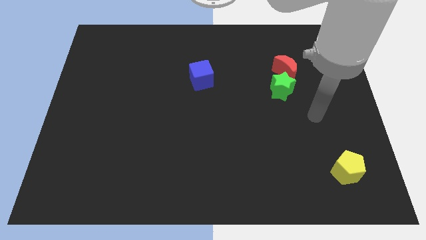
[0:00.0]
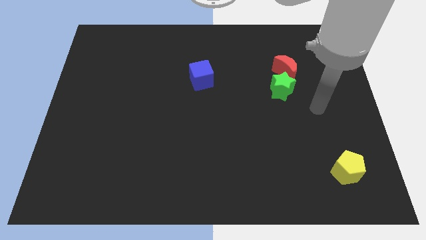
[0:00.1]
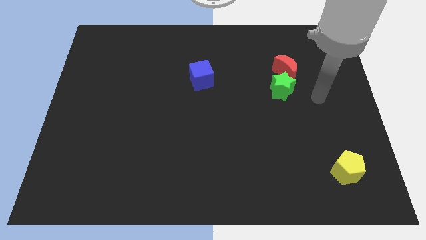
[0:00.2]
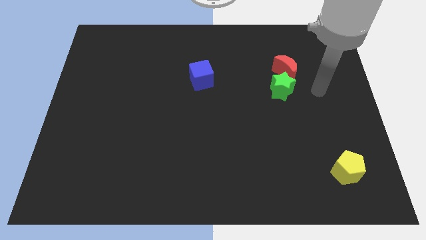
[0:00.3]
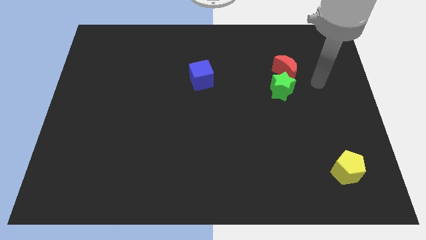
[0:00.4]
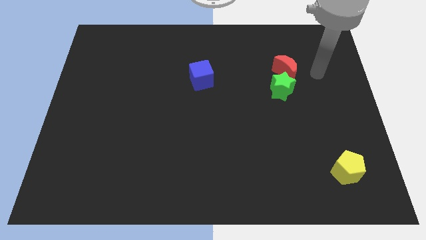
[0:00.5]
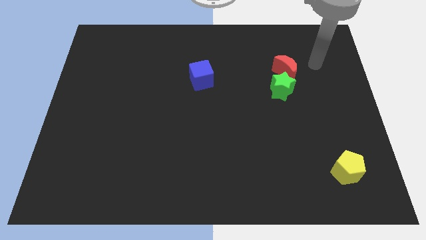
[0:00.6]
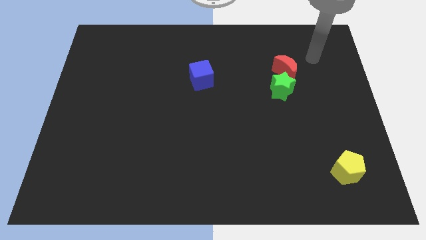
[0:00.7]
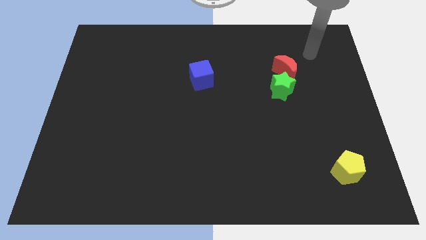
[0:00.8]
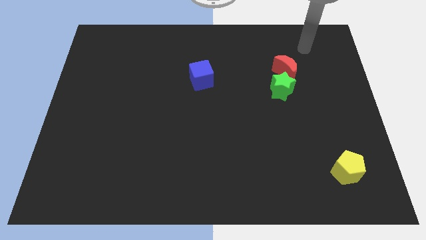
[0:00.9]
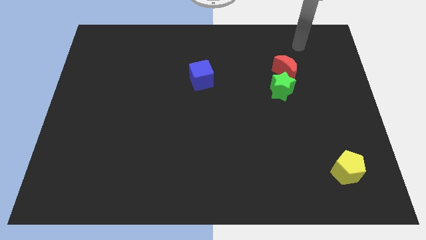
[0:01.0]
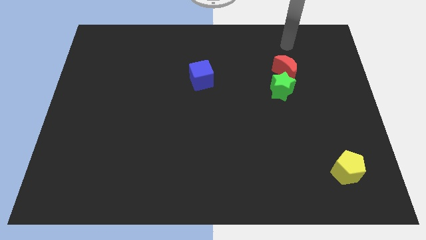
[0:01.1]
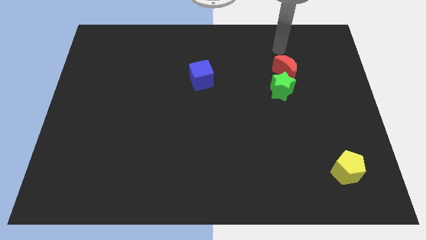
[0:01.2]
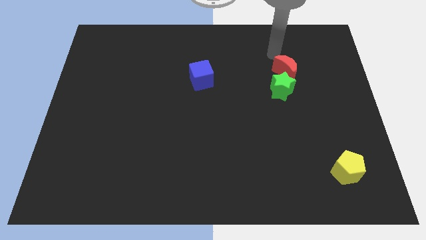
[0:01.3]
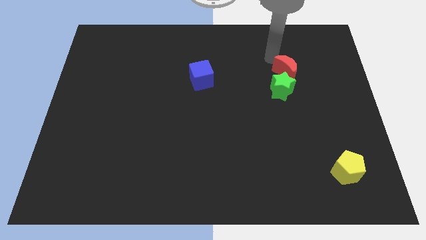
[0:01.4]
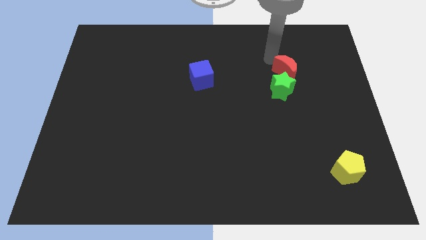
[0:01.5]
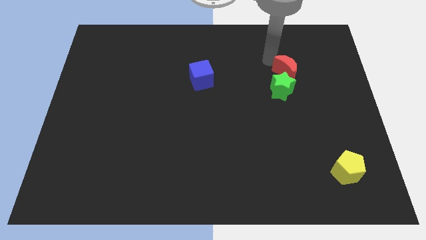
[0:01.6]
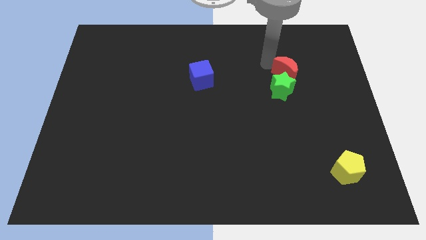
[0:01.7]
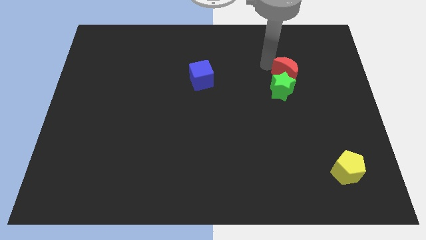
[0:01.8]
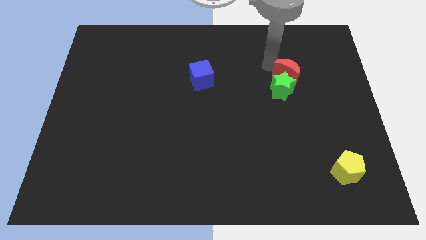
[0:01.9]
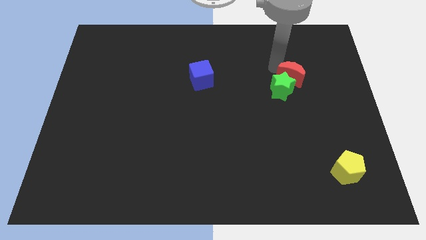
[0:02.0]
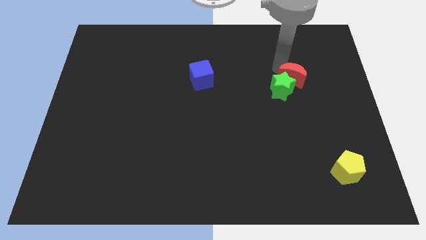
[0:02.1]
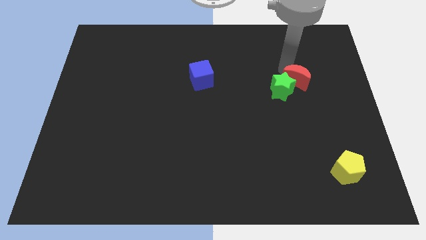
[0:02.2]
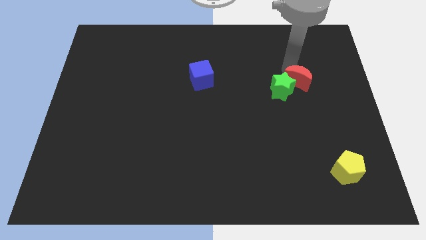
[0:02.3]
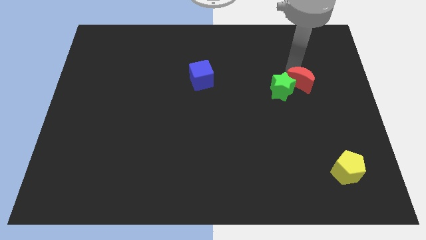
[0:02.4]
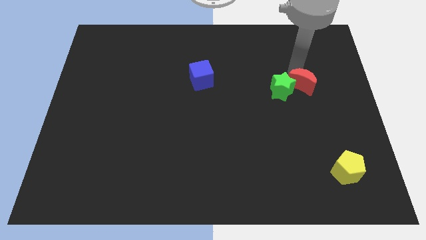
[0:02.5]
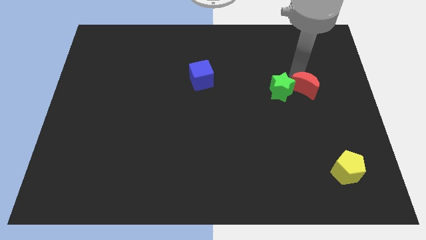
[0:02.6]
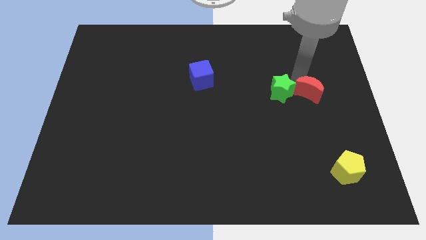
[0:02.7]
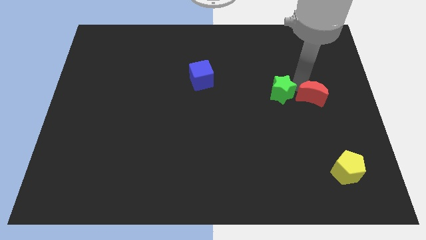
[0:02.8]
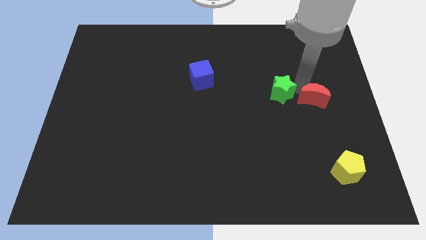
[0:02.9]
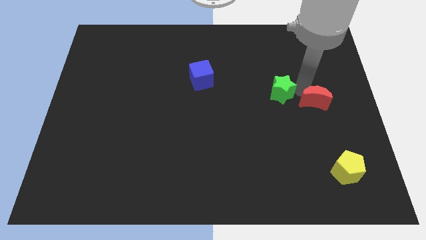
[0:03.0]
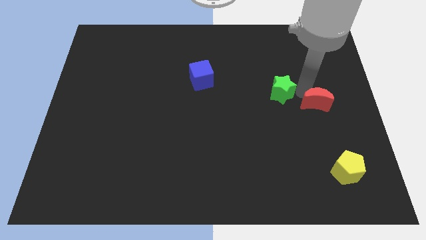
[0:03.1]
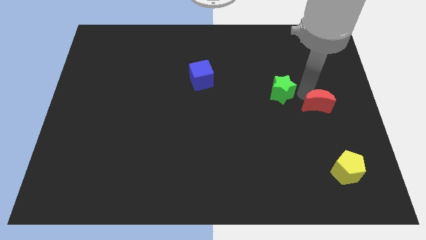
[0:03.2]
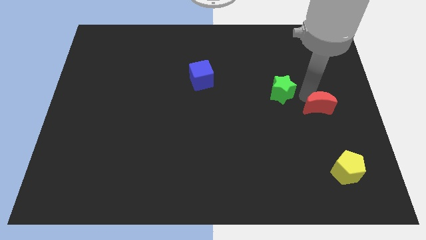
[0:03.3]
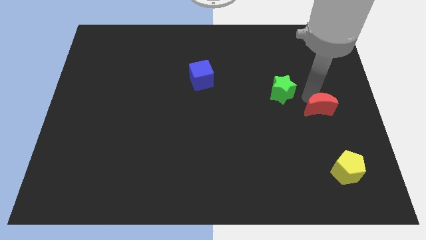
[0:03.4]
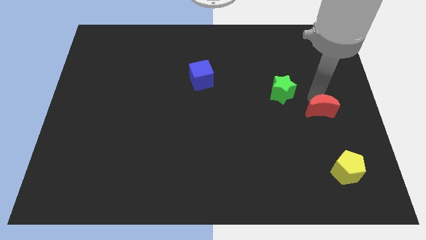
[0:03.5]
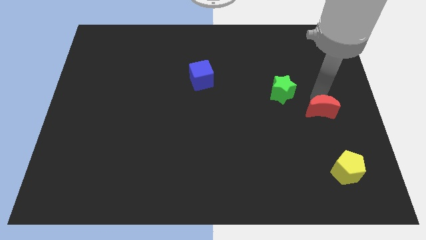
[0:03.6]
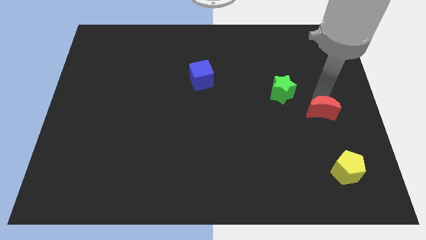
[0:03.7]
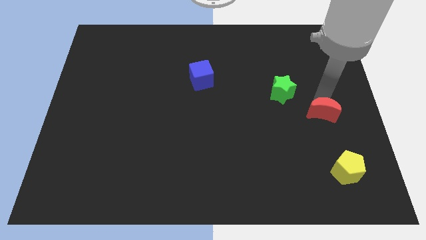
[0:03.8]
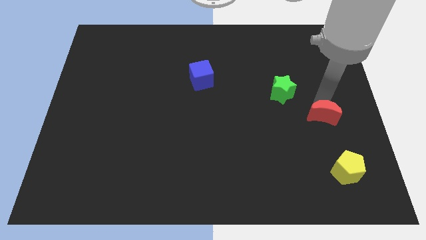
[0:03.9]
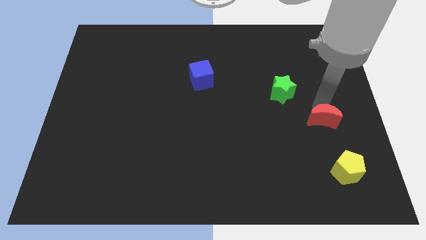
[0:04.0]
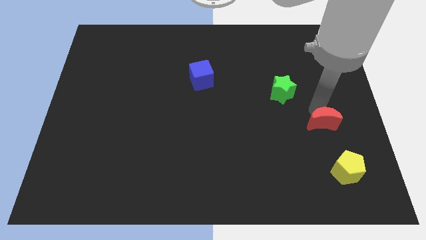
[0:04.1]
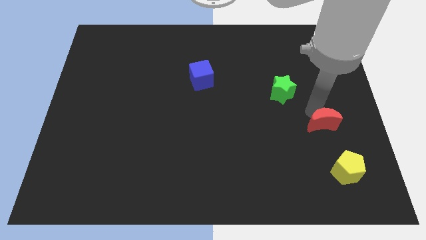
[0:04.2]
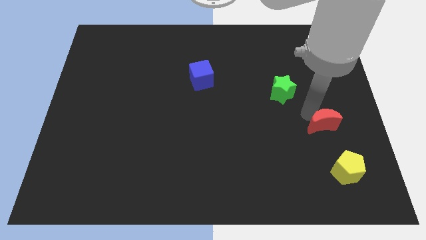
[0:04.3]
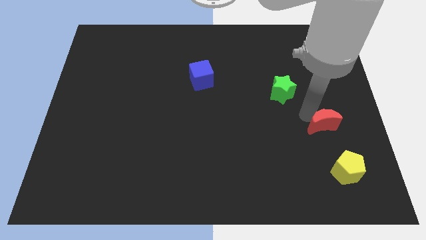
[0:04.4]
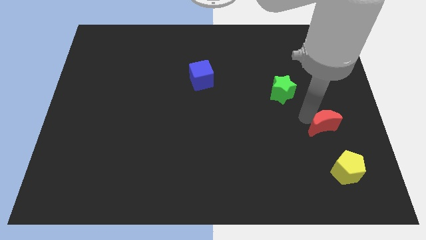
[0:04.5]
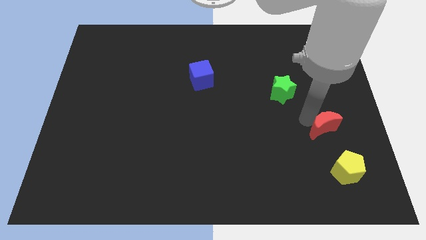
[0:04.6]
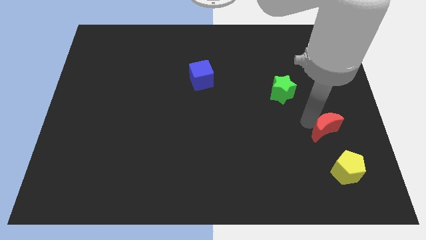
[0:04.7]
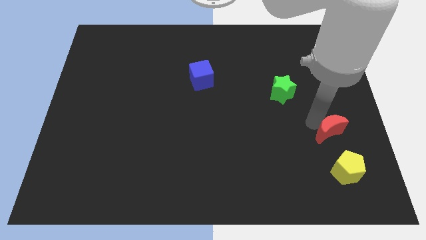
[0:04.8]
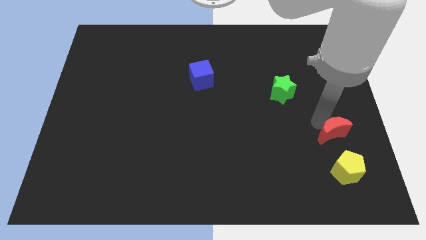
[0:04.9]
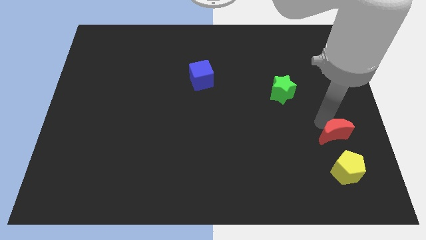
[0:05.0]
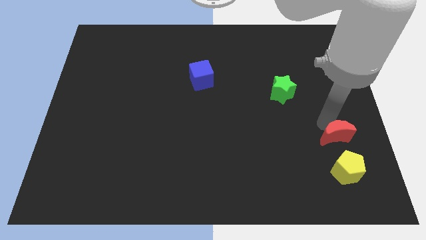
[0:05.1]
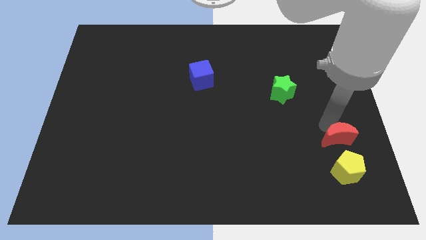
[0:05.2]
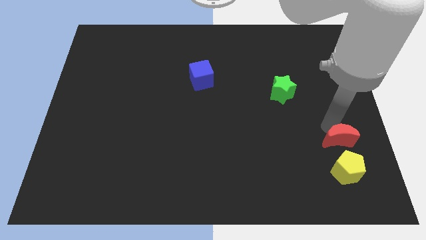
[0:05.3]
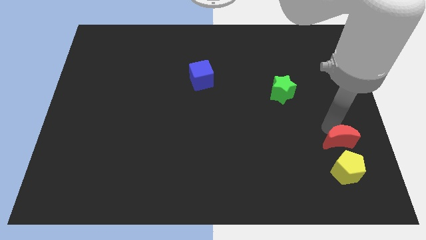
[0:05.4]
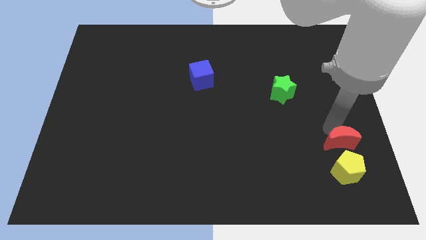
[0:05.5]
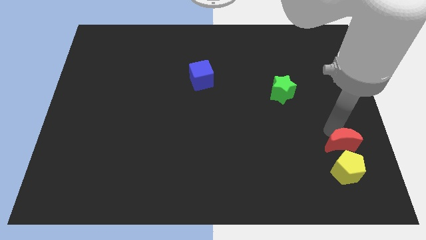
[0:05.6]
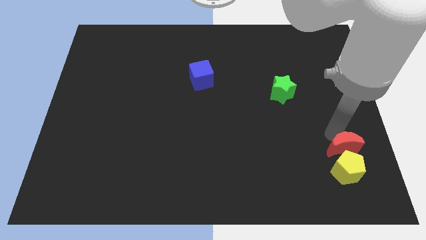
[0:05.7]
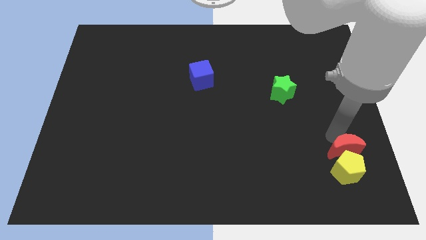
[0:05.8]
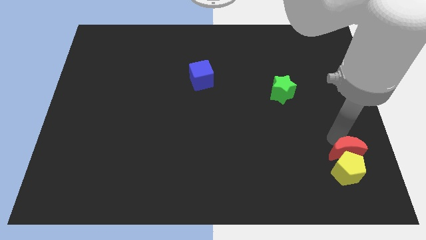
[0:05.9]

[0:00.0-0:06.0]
push the moon to the yellow block

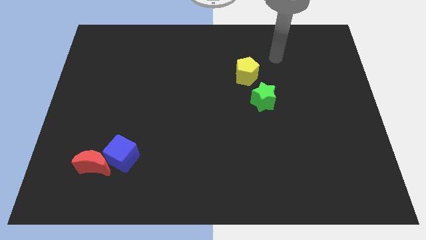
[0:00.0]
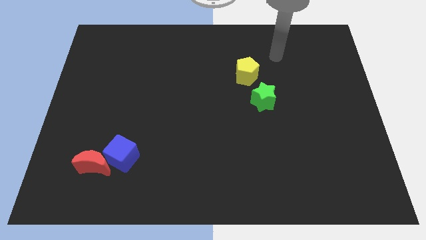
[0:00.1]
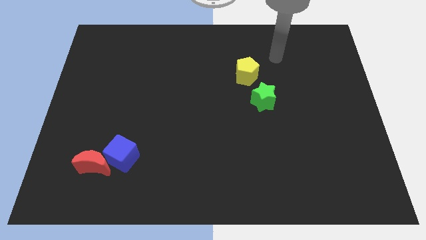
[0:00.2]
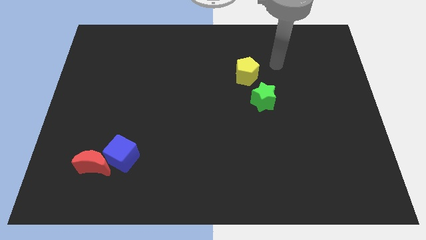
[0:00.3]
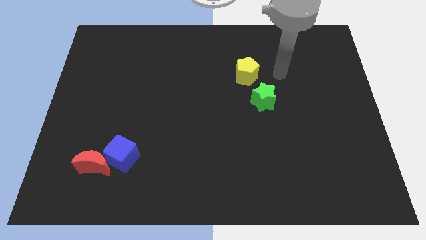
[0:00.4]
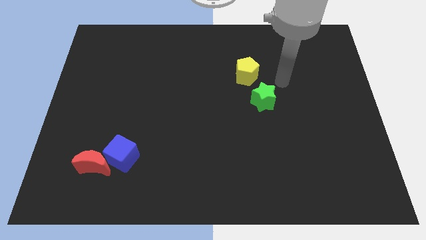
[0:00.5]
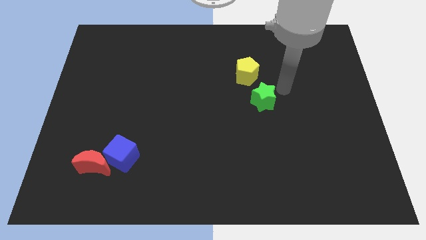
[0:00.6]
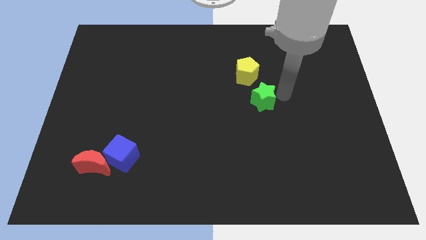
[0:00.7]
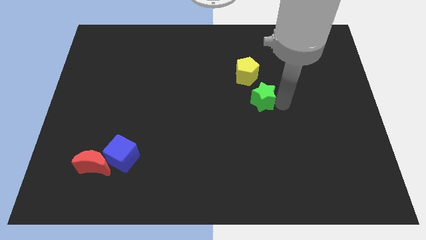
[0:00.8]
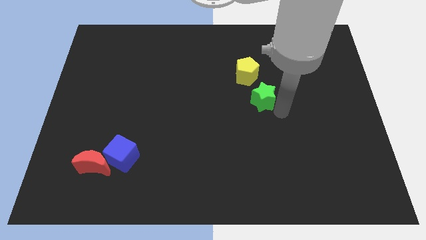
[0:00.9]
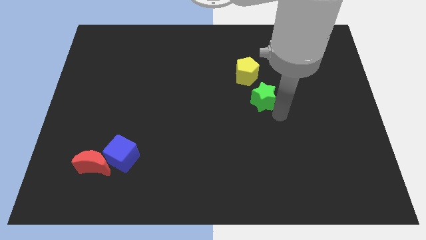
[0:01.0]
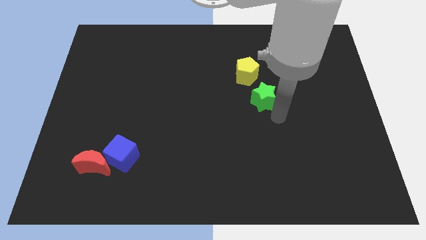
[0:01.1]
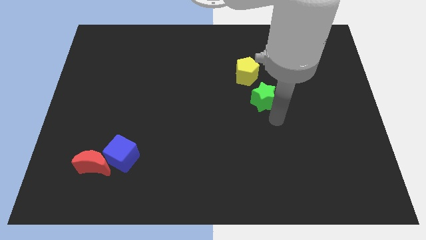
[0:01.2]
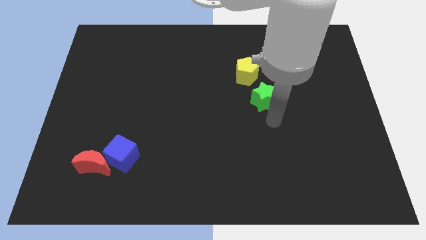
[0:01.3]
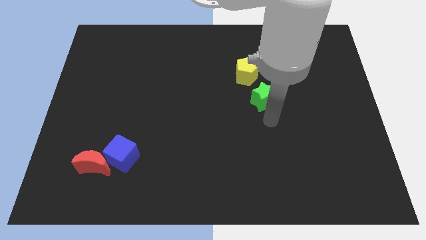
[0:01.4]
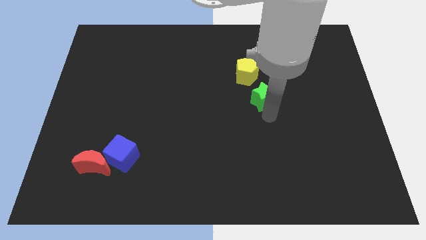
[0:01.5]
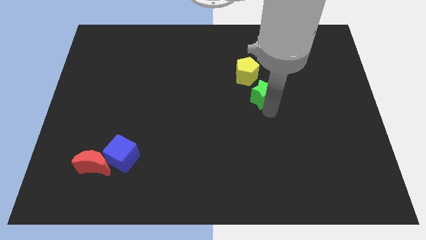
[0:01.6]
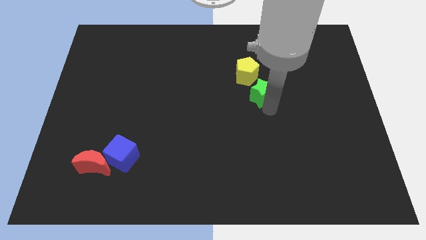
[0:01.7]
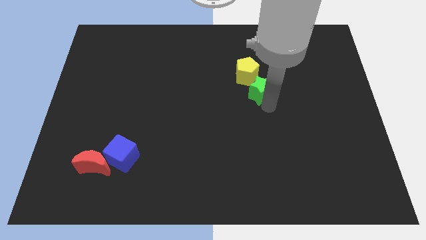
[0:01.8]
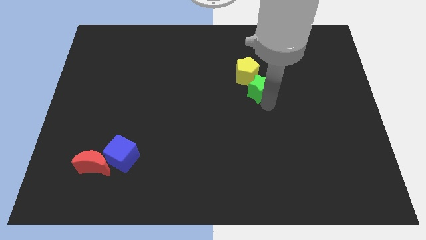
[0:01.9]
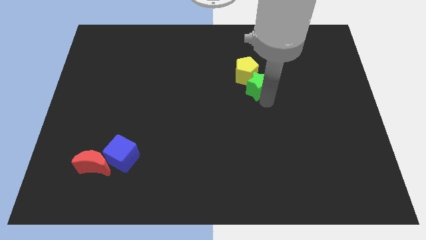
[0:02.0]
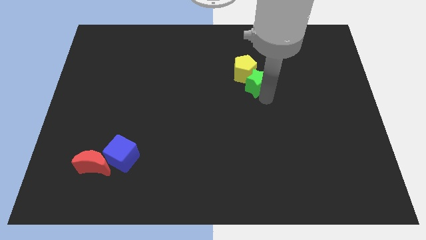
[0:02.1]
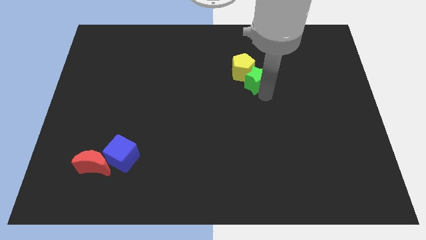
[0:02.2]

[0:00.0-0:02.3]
put the star next to the pentagon

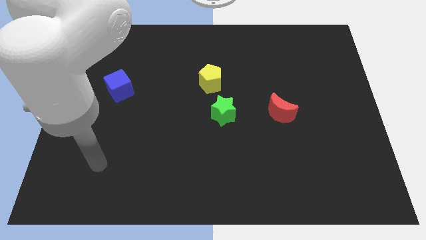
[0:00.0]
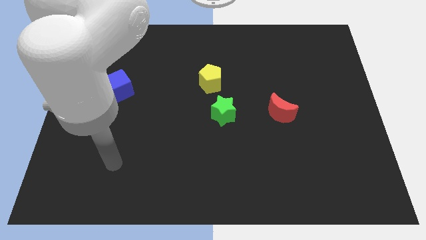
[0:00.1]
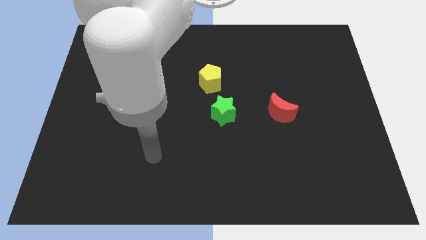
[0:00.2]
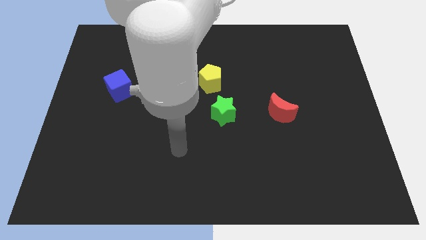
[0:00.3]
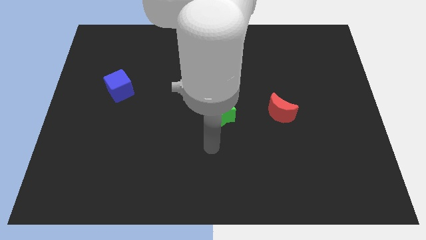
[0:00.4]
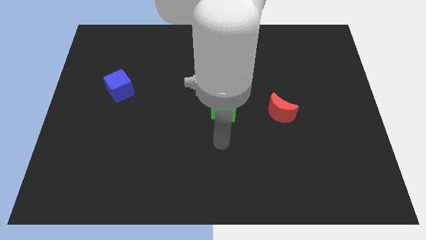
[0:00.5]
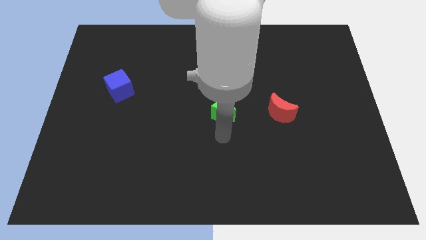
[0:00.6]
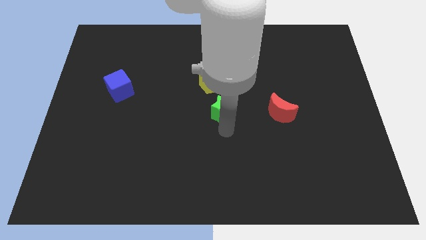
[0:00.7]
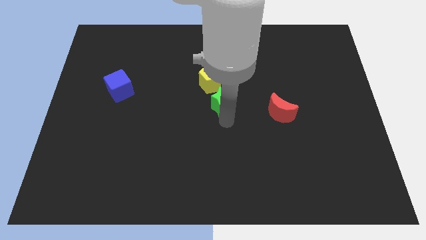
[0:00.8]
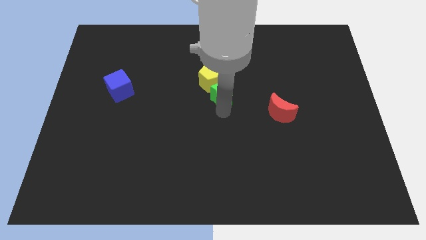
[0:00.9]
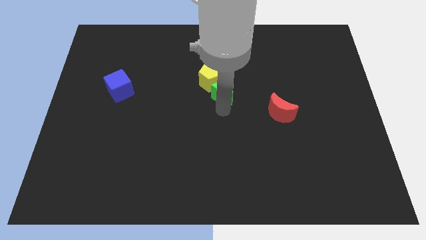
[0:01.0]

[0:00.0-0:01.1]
push the green star close to the yellow block
